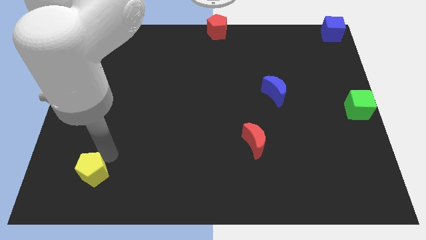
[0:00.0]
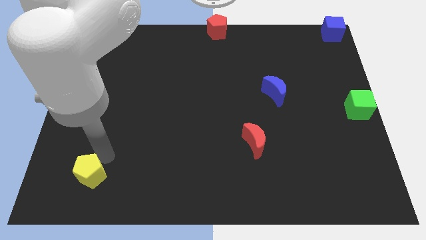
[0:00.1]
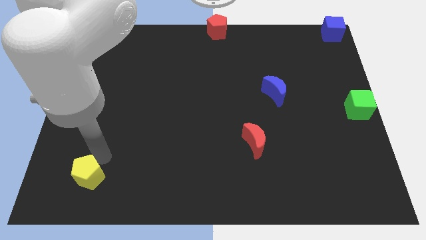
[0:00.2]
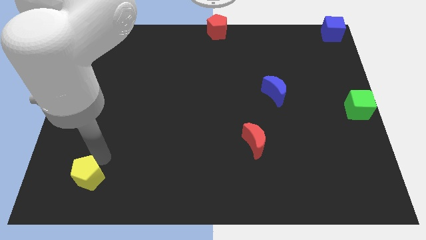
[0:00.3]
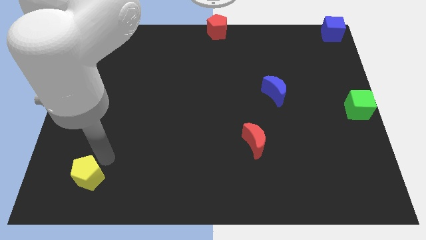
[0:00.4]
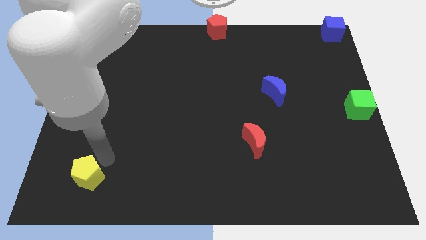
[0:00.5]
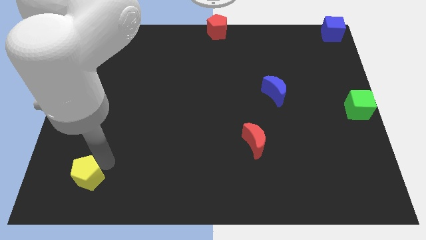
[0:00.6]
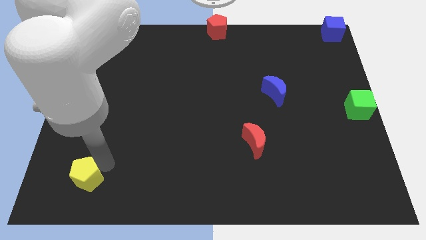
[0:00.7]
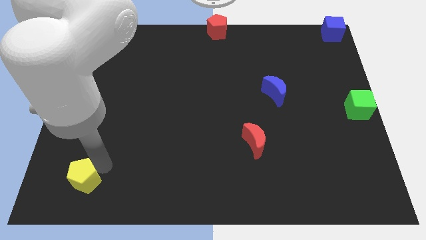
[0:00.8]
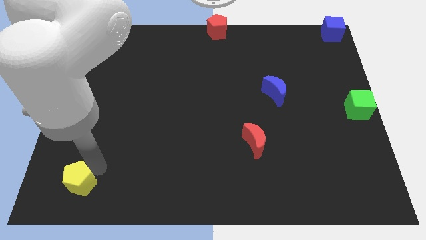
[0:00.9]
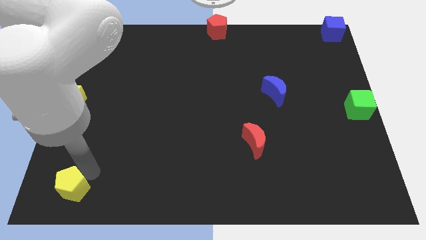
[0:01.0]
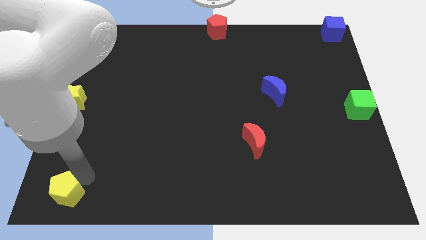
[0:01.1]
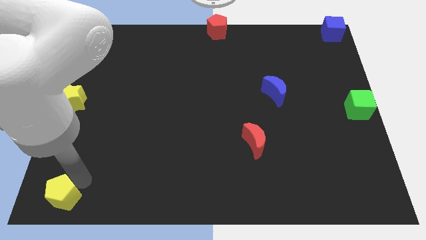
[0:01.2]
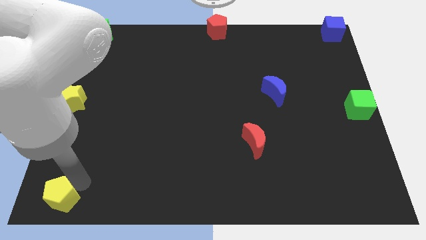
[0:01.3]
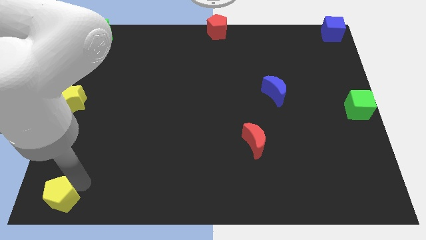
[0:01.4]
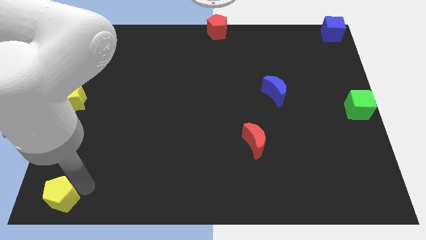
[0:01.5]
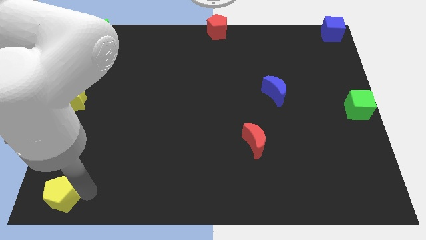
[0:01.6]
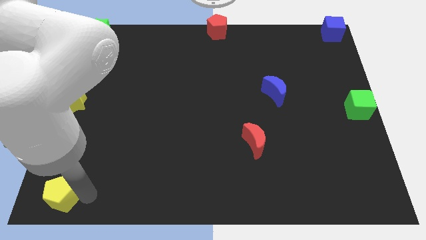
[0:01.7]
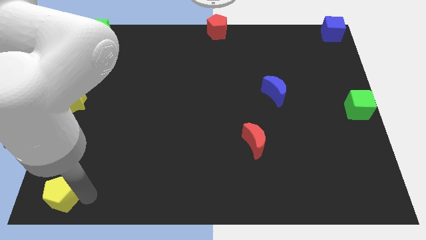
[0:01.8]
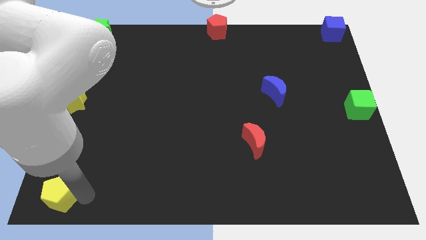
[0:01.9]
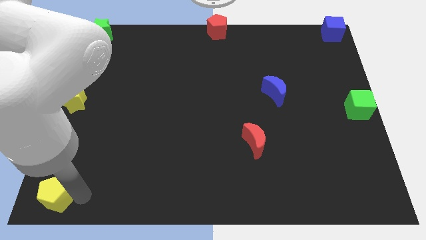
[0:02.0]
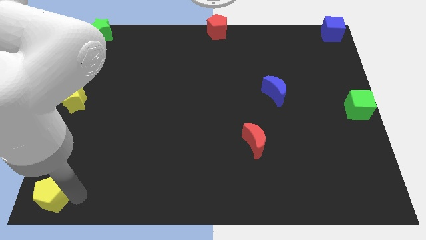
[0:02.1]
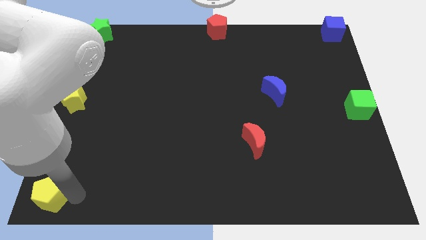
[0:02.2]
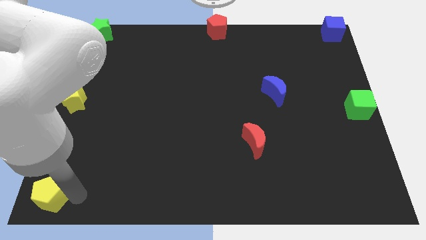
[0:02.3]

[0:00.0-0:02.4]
push the yellow pentagon to the bottom left of the board

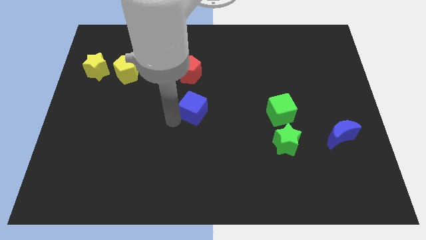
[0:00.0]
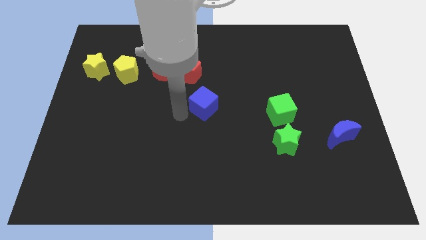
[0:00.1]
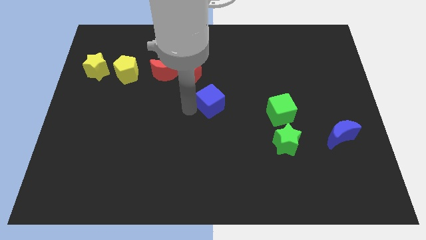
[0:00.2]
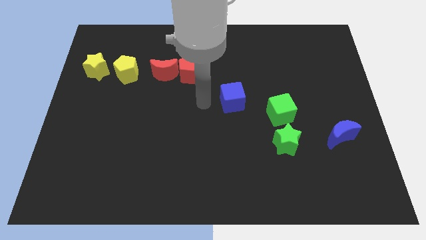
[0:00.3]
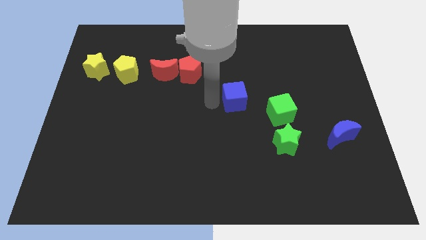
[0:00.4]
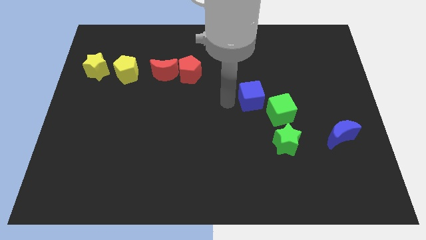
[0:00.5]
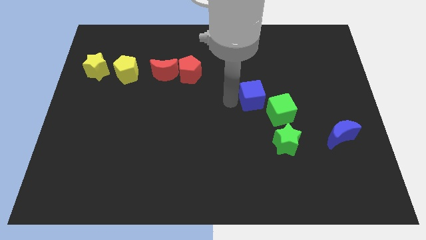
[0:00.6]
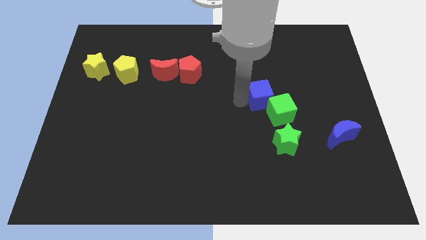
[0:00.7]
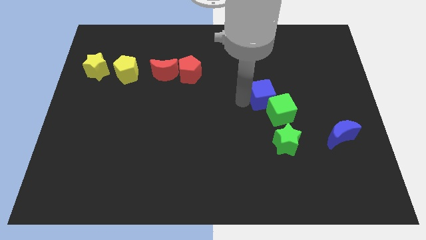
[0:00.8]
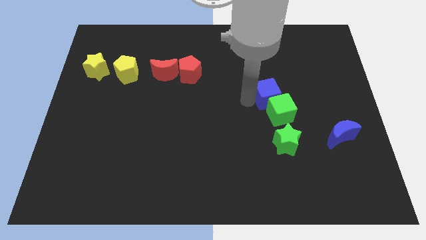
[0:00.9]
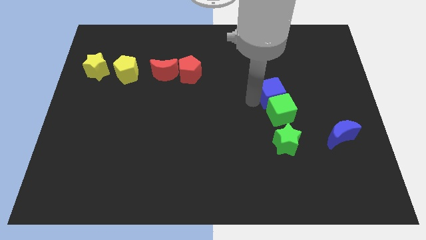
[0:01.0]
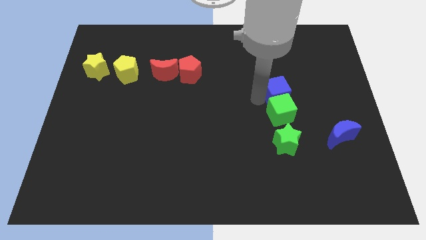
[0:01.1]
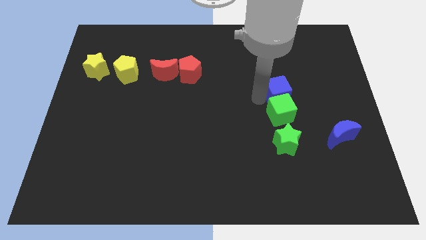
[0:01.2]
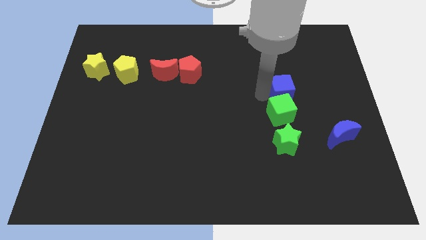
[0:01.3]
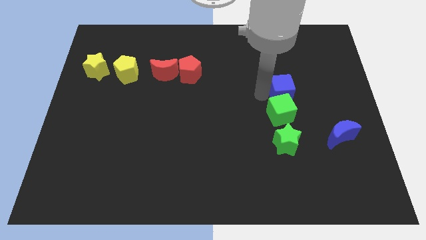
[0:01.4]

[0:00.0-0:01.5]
slightly move the blue cube towards the center of the board

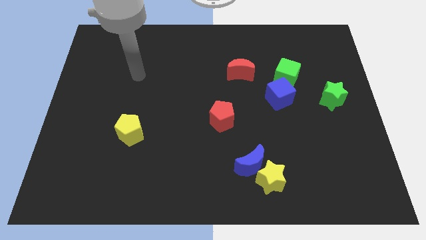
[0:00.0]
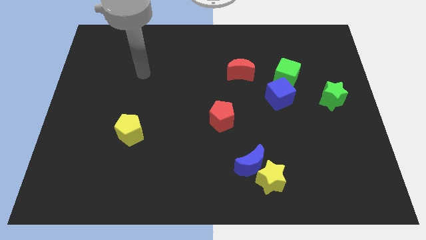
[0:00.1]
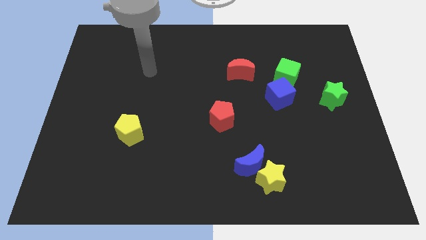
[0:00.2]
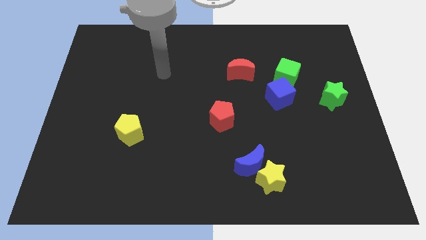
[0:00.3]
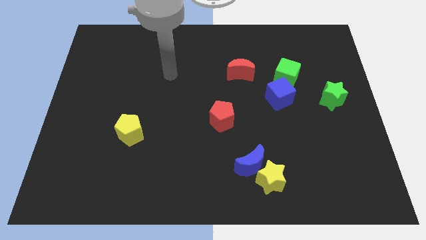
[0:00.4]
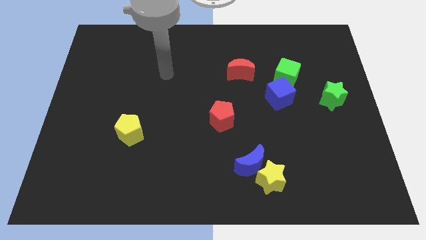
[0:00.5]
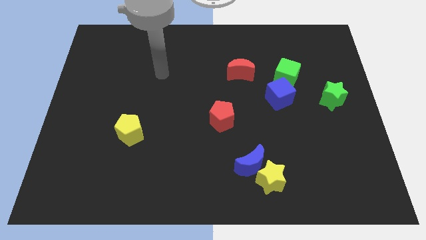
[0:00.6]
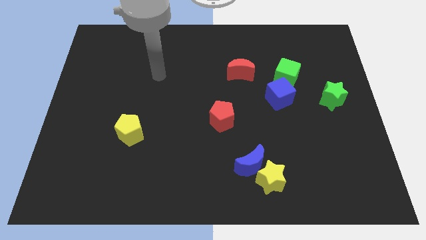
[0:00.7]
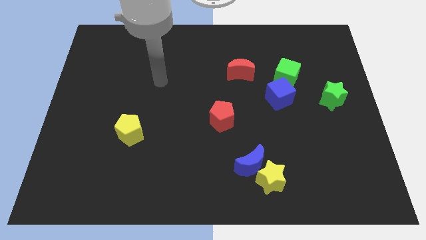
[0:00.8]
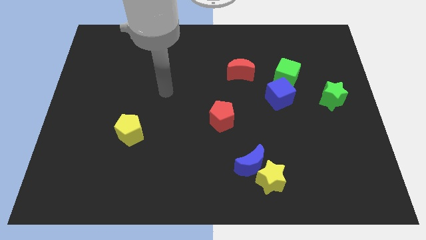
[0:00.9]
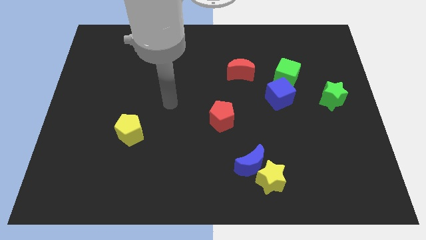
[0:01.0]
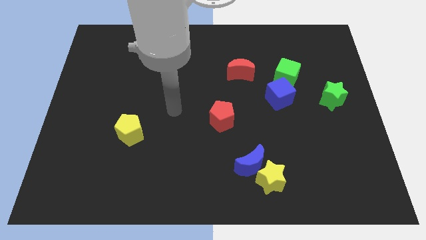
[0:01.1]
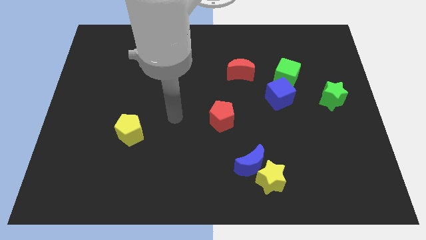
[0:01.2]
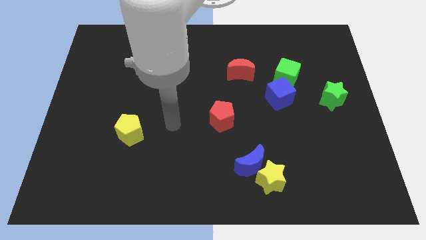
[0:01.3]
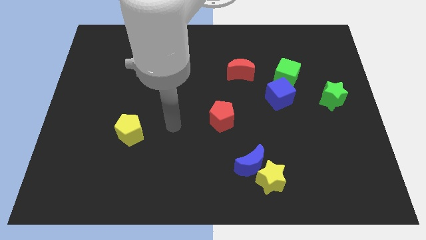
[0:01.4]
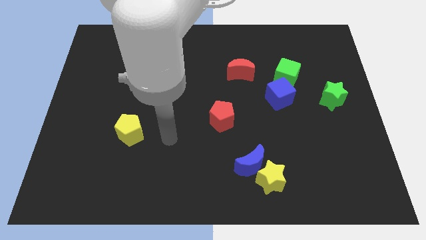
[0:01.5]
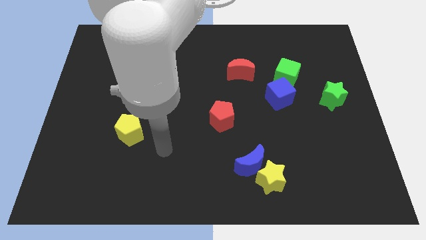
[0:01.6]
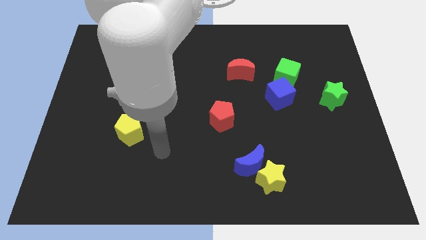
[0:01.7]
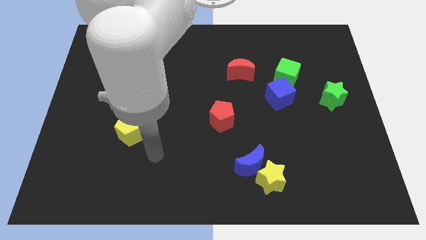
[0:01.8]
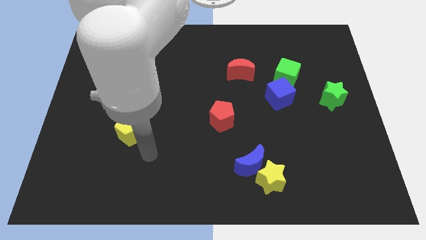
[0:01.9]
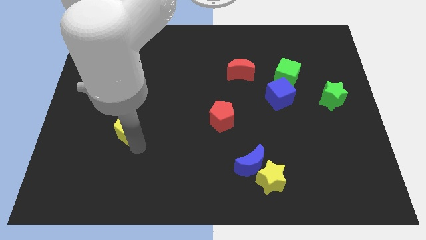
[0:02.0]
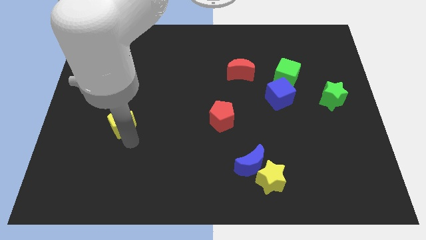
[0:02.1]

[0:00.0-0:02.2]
move your arm close to yellow pentagon

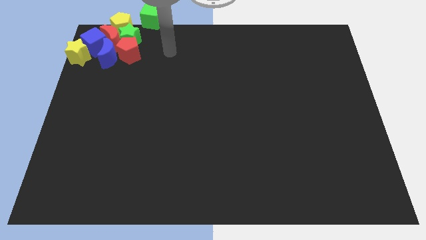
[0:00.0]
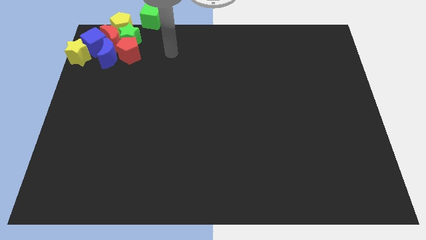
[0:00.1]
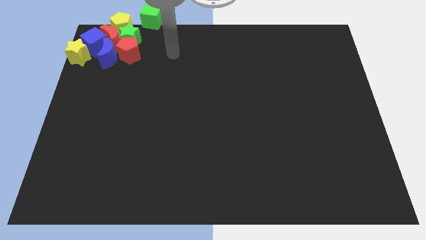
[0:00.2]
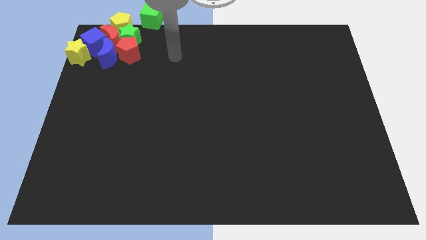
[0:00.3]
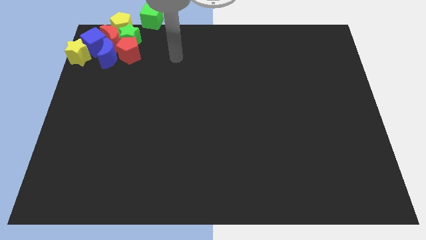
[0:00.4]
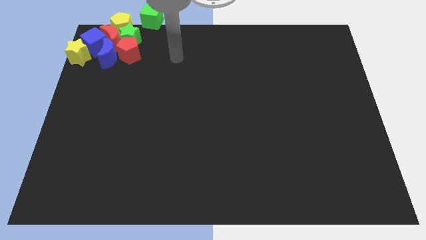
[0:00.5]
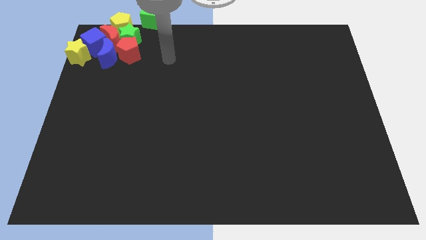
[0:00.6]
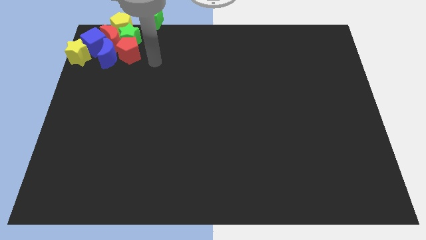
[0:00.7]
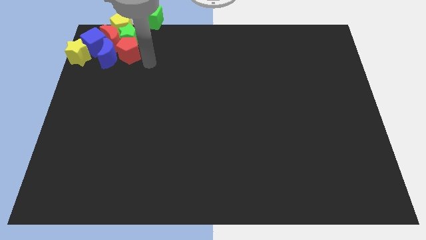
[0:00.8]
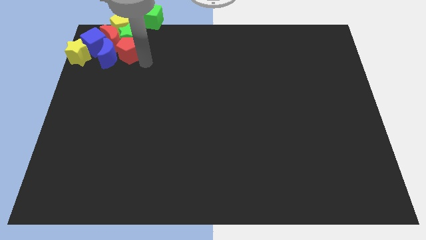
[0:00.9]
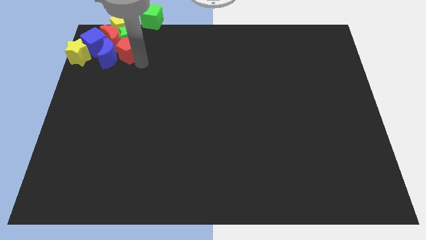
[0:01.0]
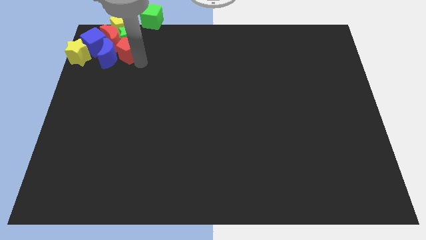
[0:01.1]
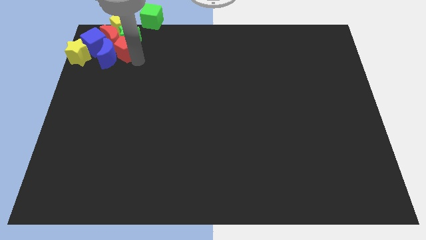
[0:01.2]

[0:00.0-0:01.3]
tap the red pentagon at the bottom

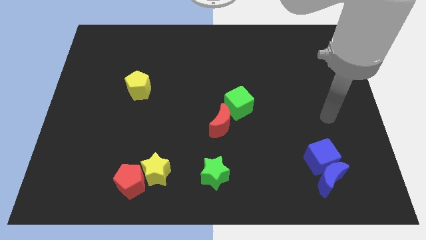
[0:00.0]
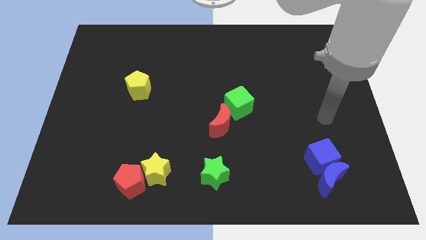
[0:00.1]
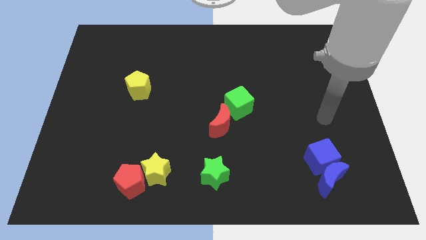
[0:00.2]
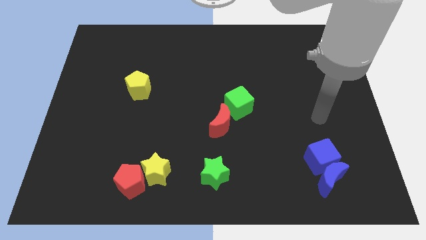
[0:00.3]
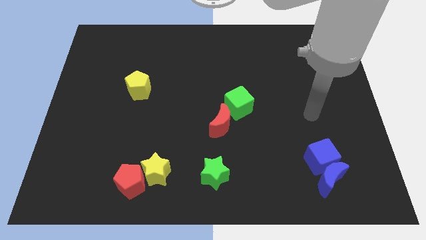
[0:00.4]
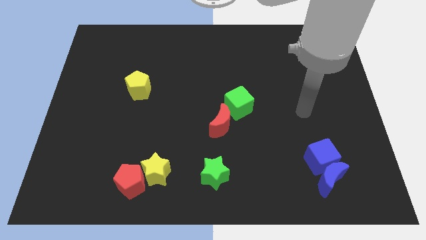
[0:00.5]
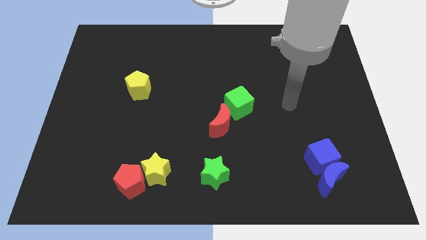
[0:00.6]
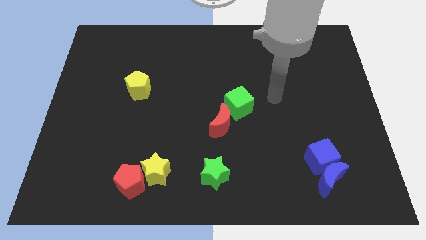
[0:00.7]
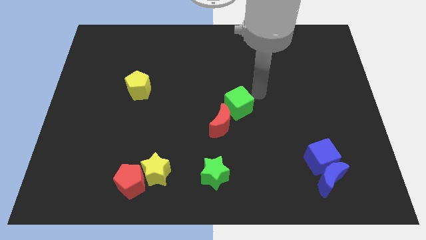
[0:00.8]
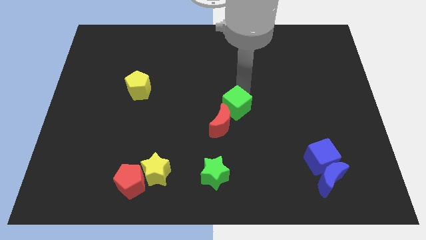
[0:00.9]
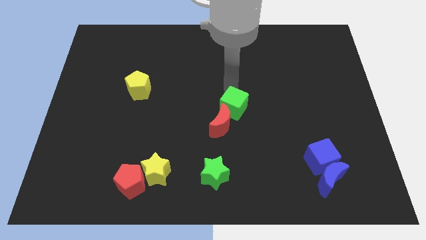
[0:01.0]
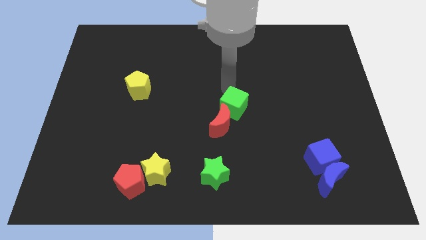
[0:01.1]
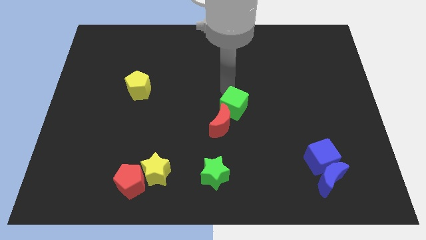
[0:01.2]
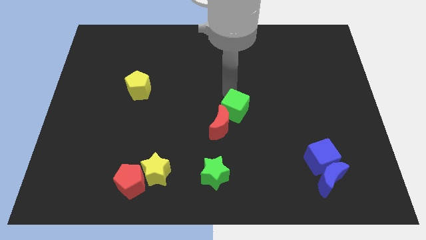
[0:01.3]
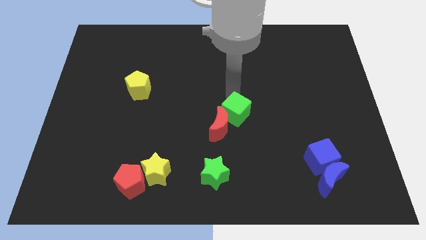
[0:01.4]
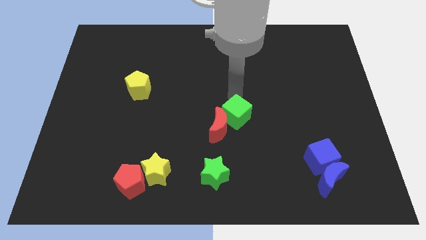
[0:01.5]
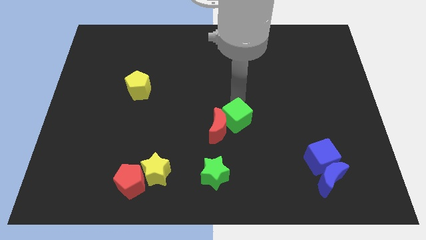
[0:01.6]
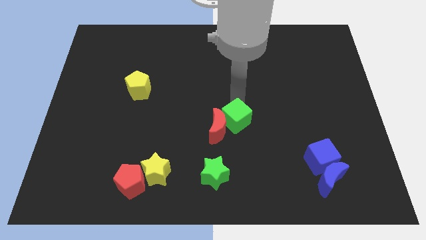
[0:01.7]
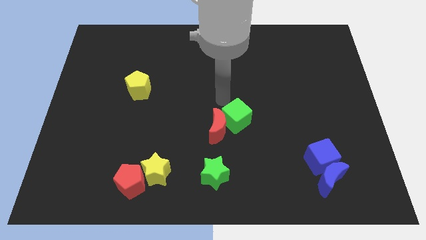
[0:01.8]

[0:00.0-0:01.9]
move the green cube towards bottom
